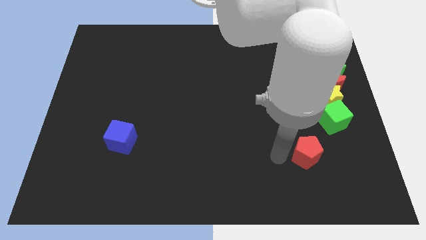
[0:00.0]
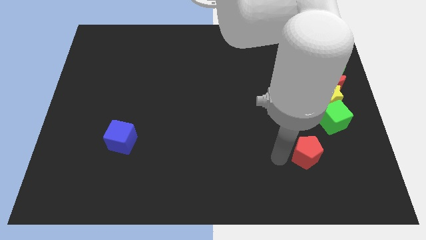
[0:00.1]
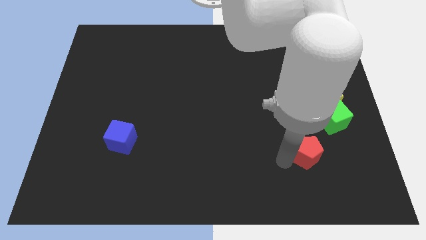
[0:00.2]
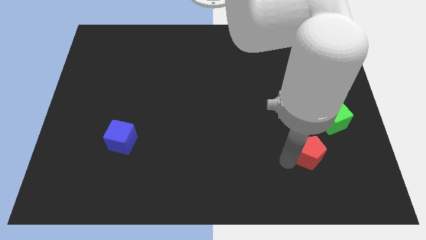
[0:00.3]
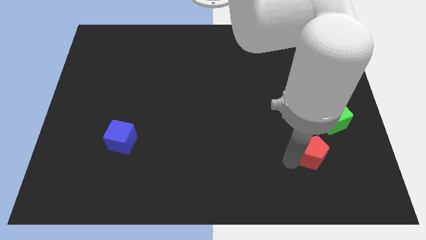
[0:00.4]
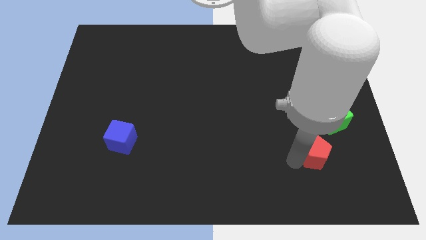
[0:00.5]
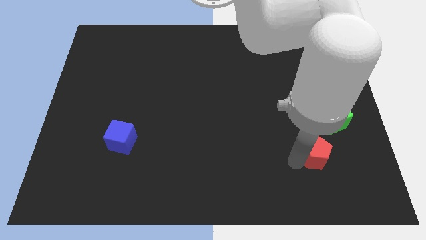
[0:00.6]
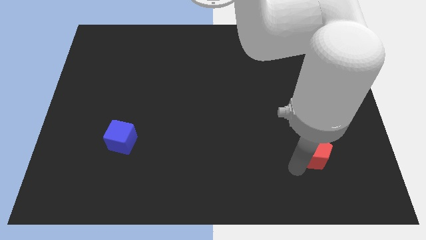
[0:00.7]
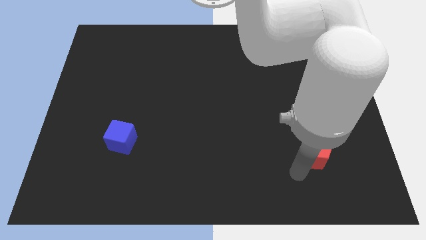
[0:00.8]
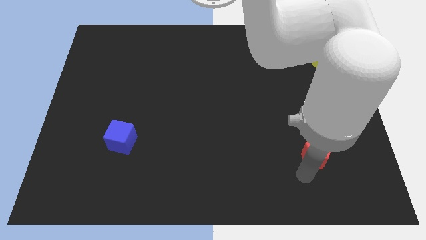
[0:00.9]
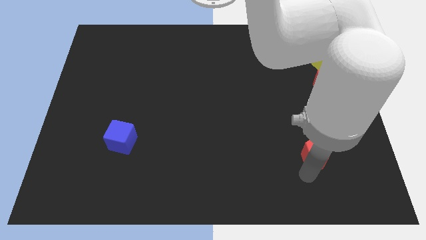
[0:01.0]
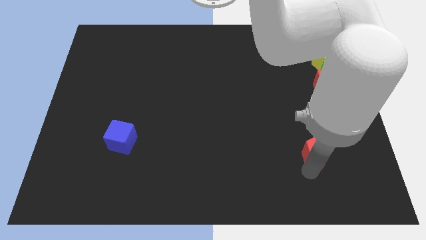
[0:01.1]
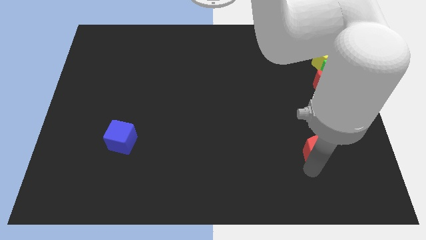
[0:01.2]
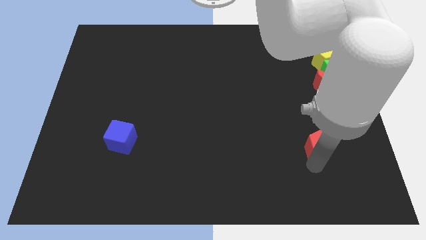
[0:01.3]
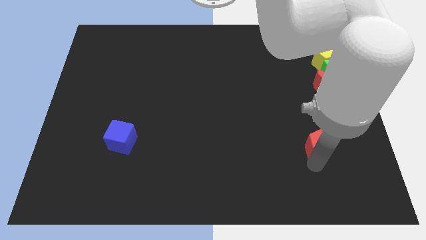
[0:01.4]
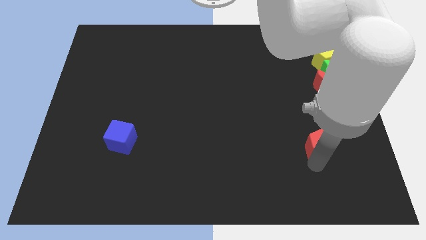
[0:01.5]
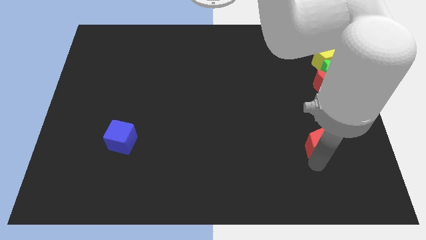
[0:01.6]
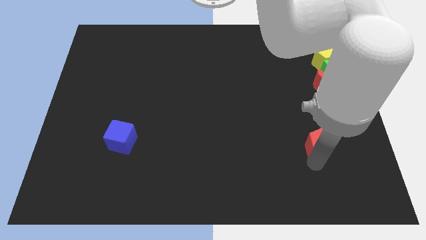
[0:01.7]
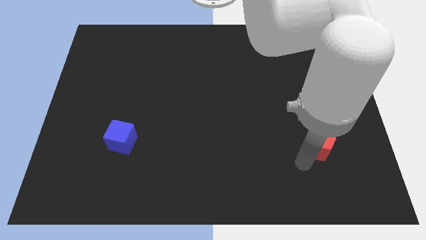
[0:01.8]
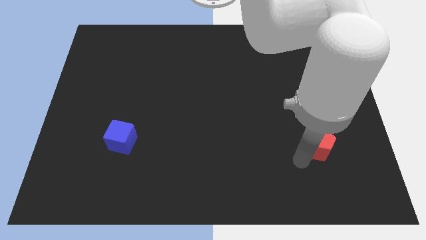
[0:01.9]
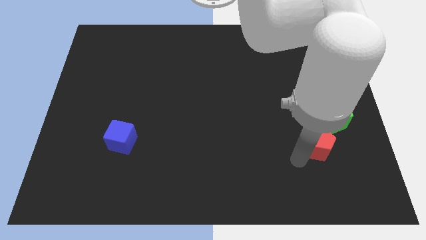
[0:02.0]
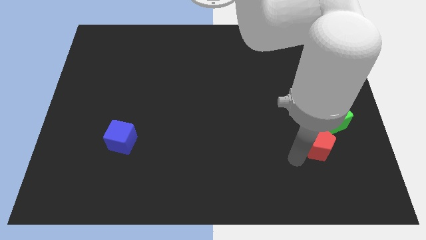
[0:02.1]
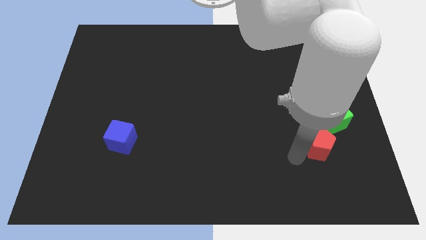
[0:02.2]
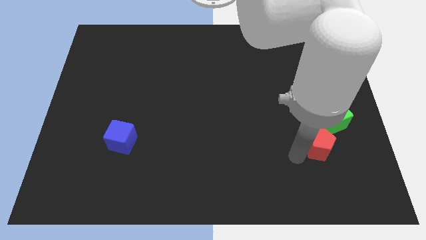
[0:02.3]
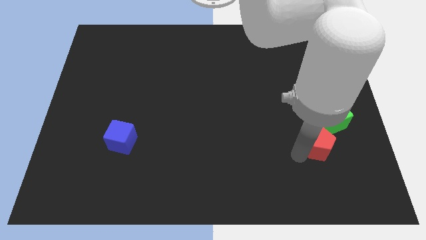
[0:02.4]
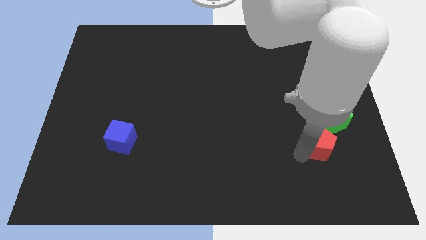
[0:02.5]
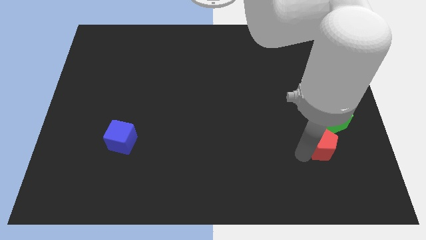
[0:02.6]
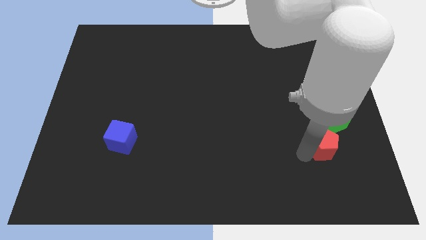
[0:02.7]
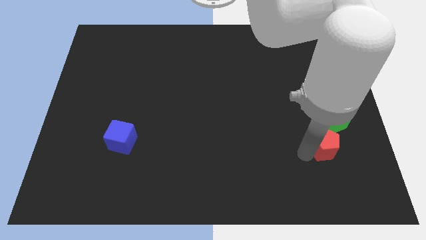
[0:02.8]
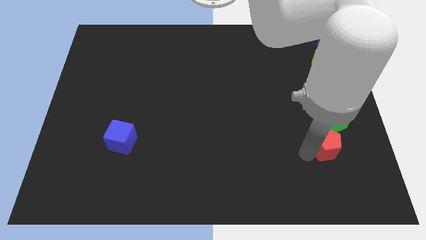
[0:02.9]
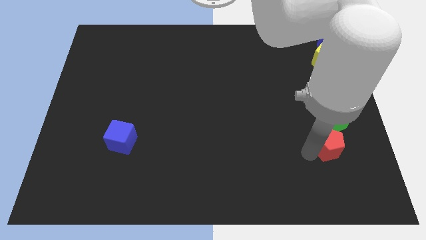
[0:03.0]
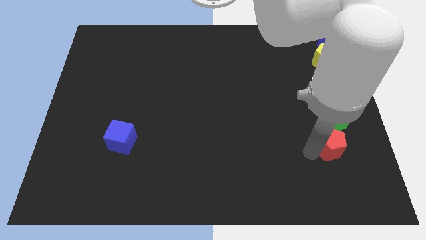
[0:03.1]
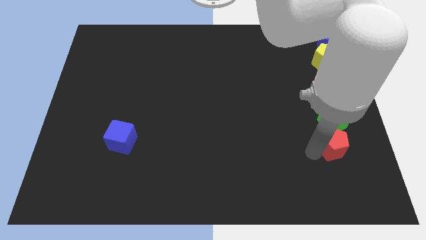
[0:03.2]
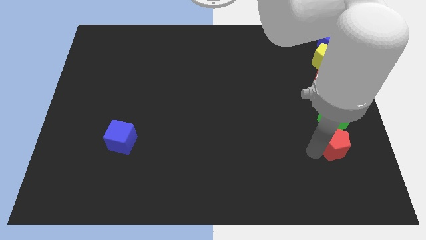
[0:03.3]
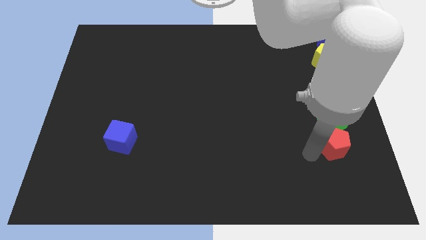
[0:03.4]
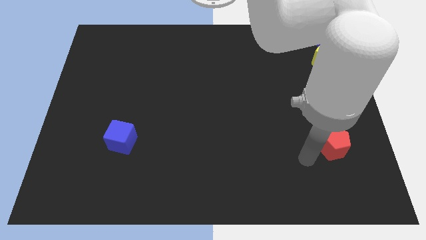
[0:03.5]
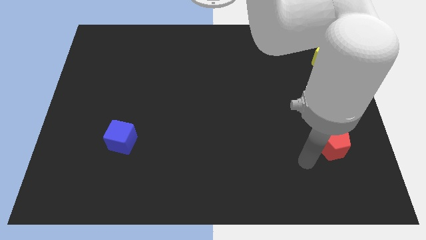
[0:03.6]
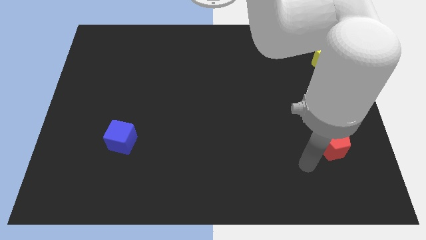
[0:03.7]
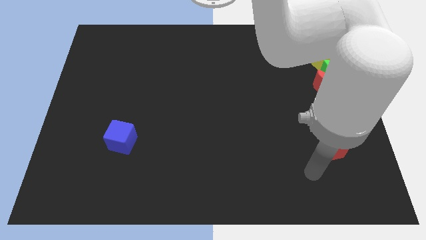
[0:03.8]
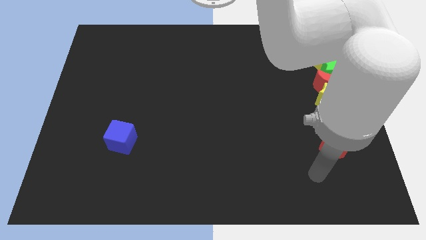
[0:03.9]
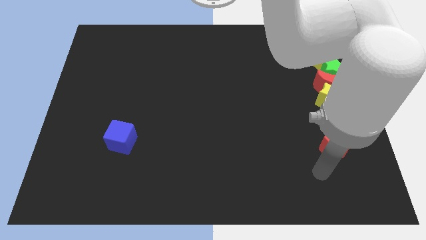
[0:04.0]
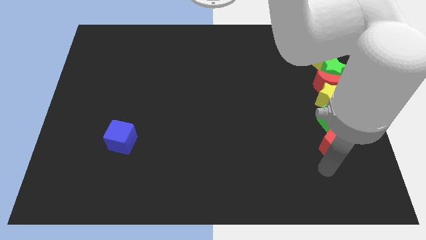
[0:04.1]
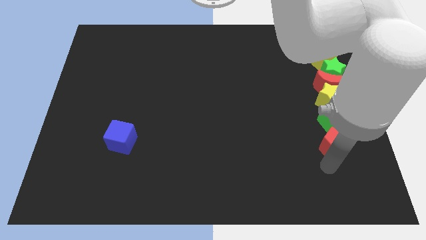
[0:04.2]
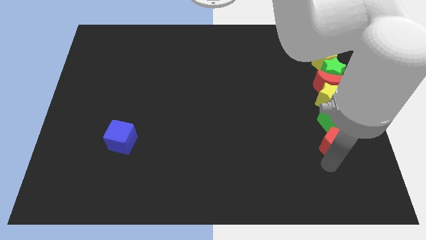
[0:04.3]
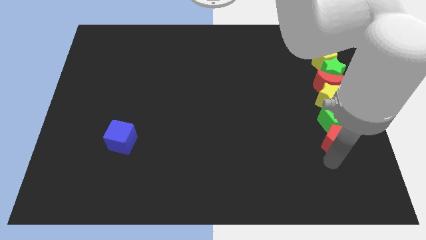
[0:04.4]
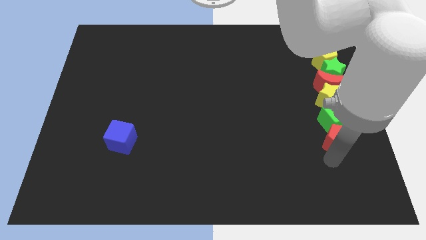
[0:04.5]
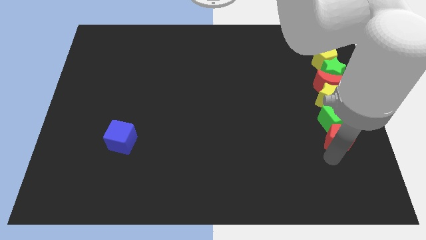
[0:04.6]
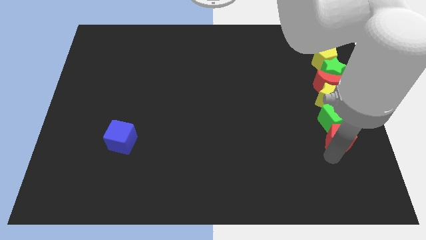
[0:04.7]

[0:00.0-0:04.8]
place the red pentagon at the bottom side of the green cube

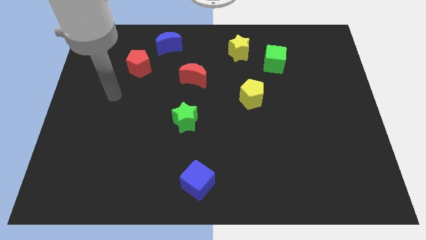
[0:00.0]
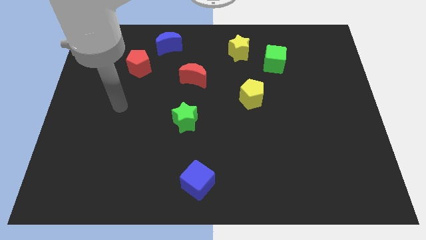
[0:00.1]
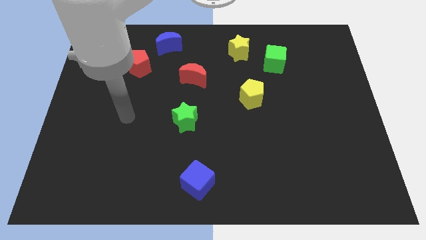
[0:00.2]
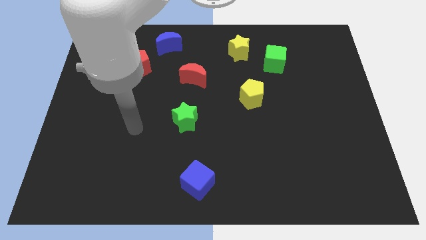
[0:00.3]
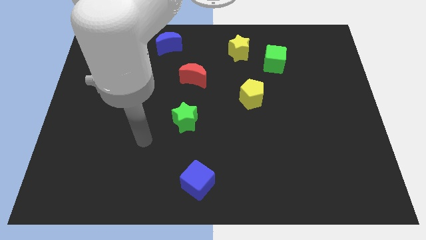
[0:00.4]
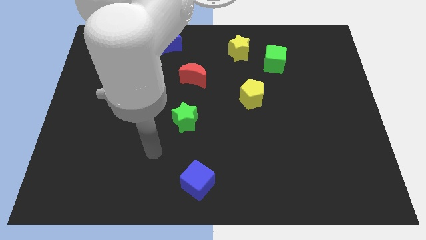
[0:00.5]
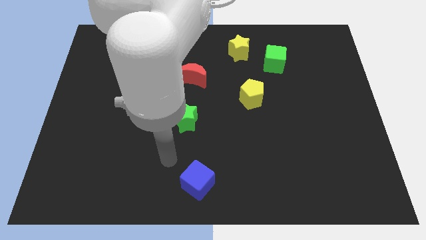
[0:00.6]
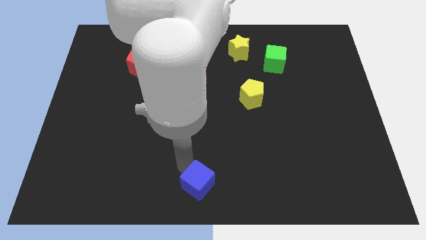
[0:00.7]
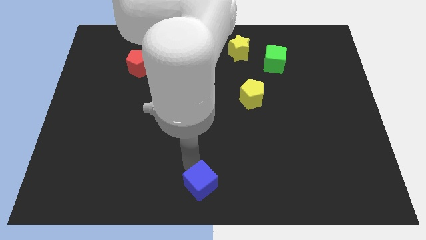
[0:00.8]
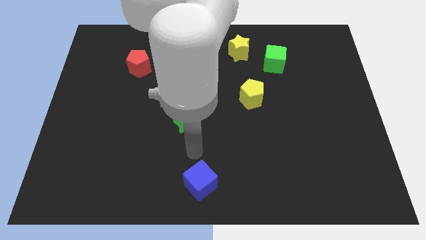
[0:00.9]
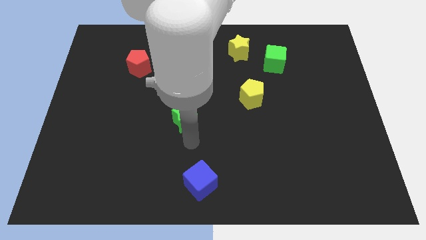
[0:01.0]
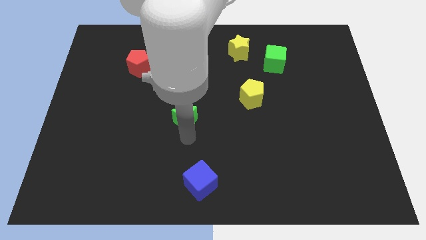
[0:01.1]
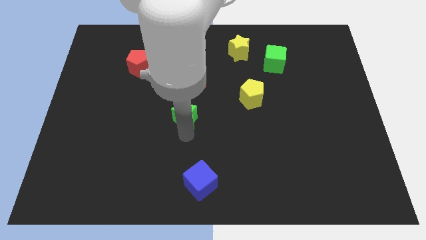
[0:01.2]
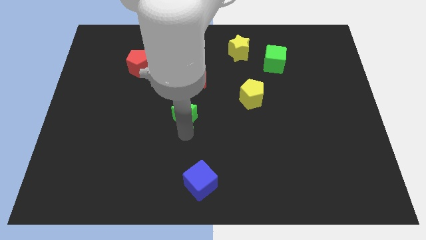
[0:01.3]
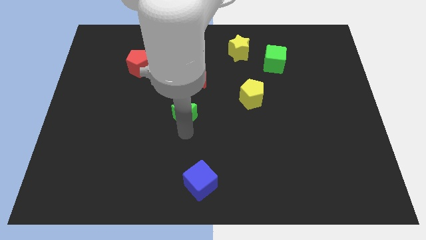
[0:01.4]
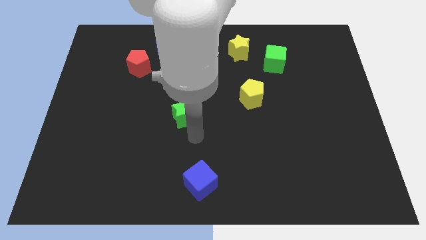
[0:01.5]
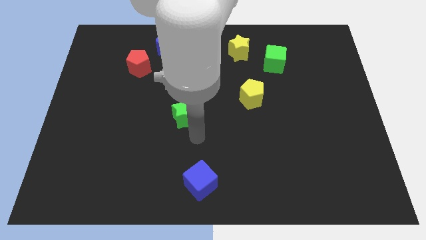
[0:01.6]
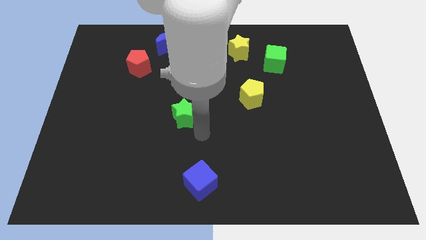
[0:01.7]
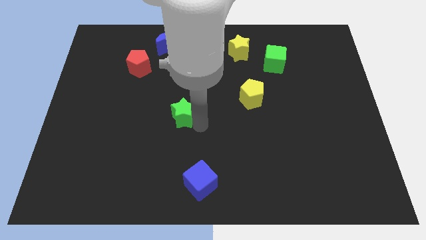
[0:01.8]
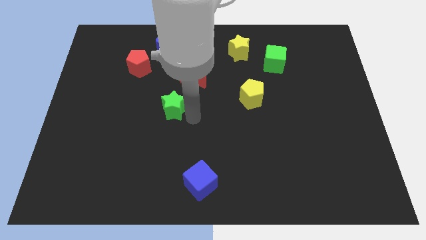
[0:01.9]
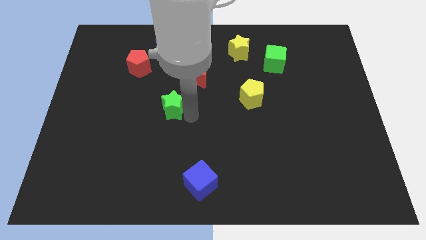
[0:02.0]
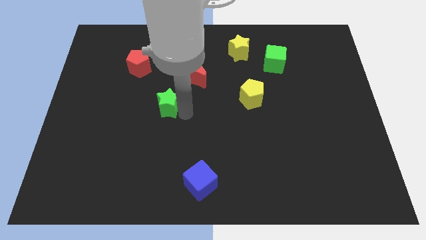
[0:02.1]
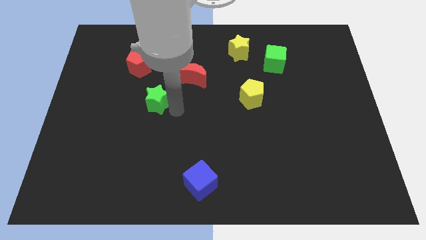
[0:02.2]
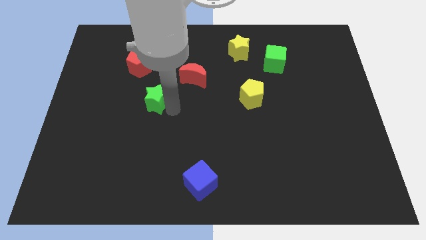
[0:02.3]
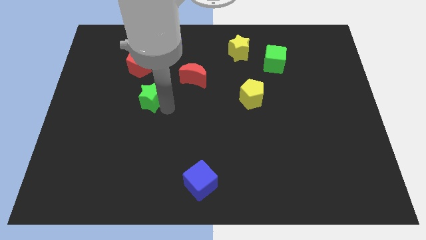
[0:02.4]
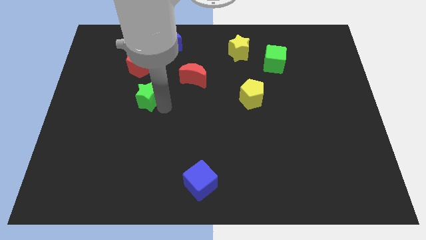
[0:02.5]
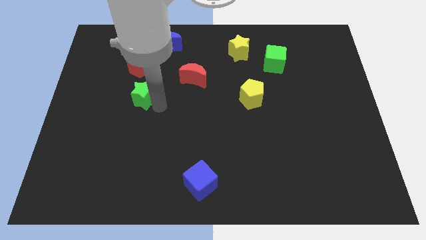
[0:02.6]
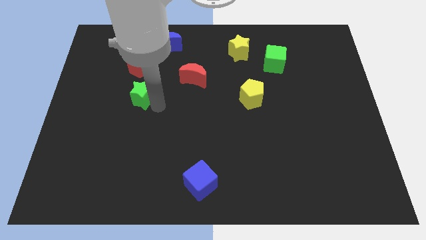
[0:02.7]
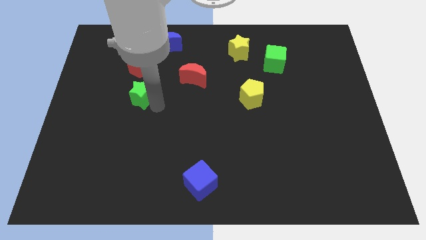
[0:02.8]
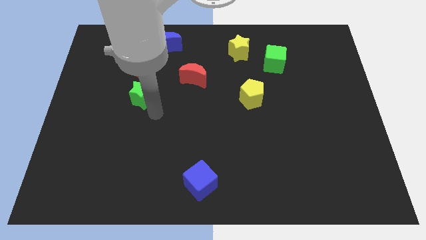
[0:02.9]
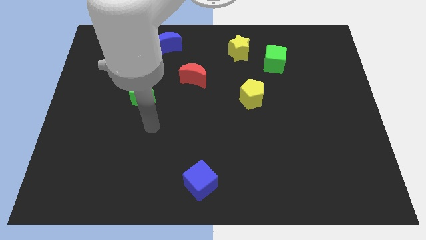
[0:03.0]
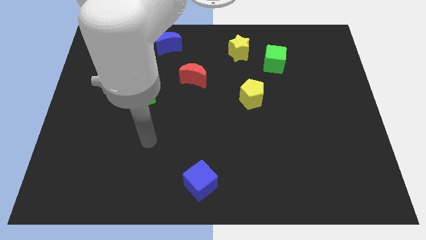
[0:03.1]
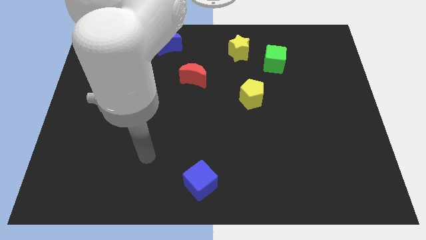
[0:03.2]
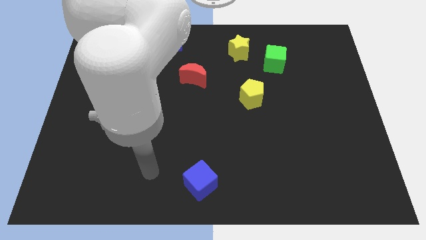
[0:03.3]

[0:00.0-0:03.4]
move green star below red pentagon

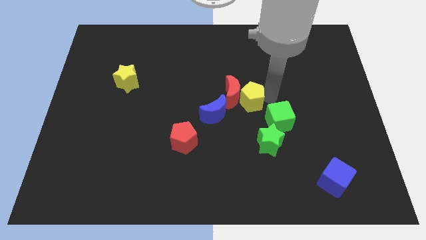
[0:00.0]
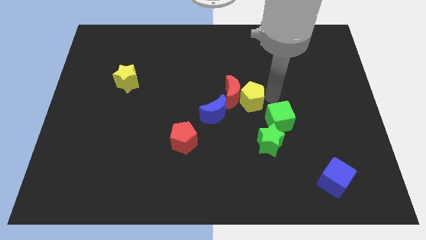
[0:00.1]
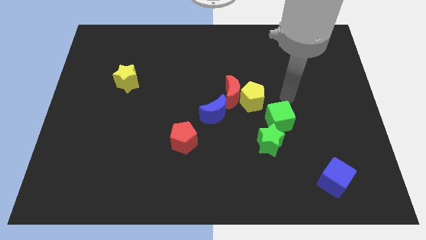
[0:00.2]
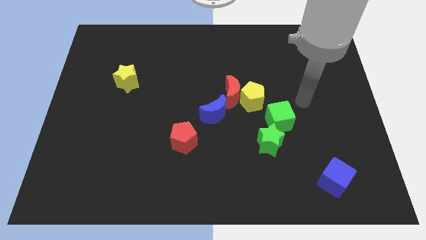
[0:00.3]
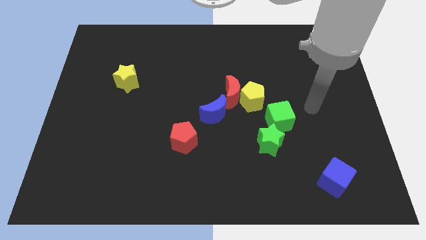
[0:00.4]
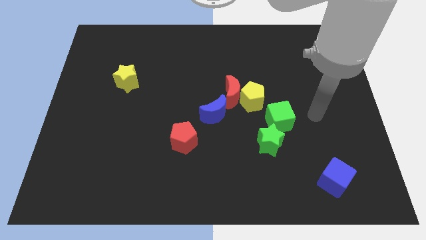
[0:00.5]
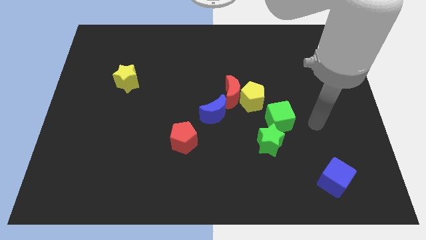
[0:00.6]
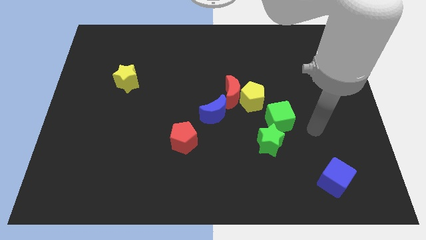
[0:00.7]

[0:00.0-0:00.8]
point your arm at the right of the green cube

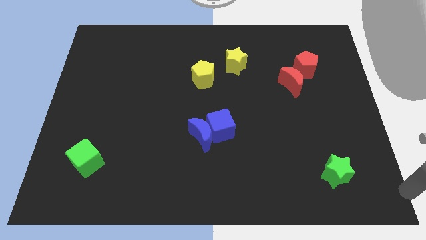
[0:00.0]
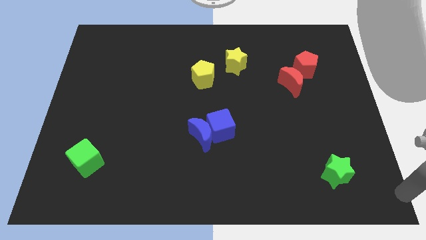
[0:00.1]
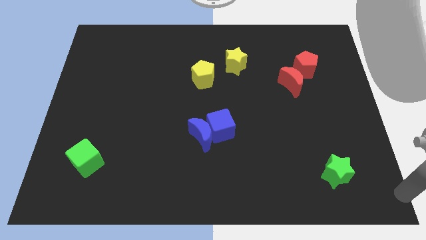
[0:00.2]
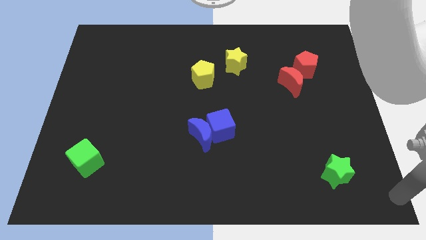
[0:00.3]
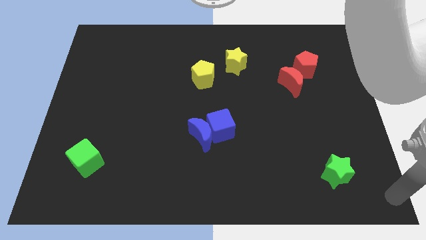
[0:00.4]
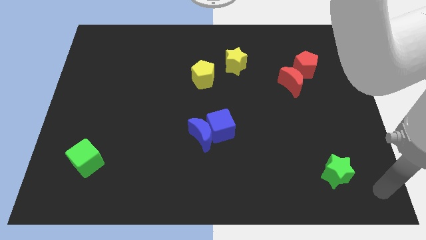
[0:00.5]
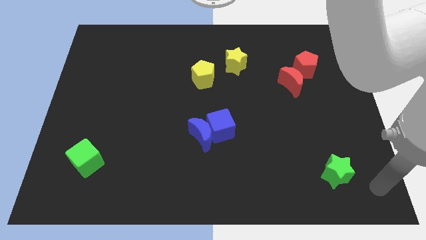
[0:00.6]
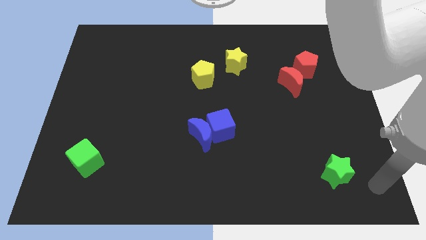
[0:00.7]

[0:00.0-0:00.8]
slightly move your arm to the bottom right of the board
